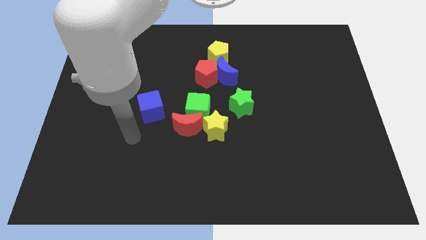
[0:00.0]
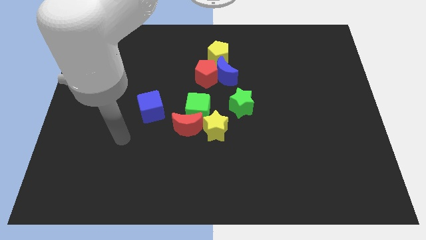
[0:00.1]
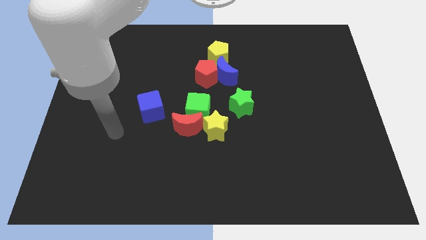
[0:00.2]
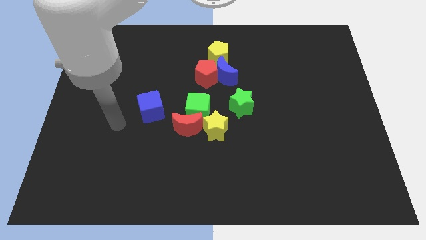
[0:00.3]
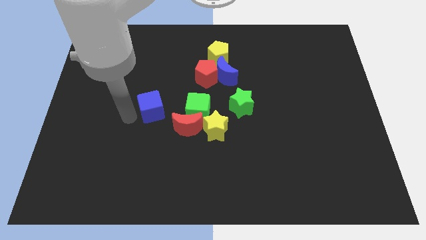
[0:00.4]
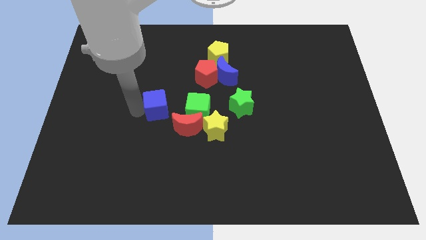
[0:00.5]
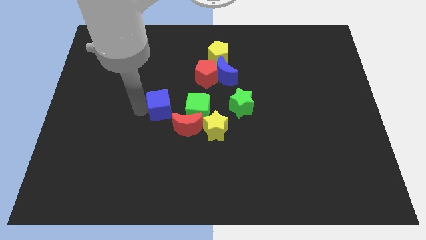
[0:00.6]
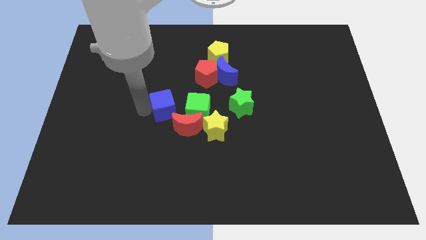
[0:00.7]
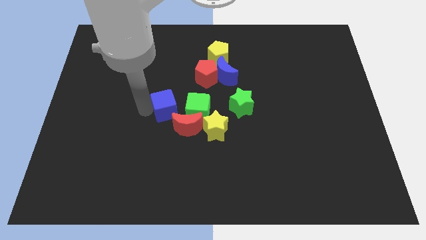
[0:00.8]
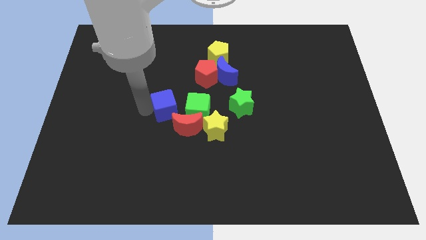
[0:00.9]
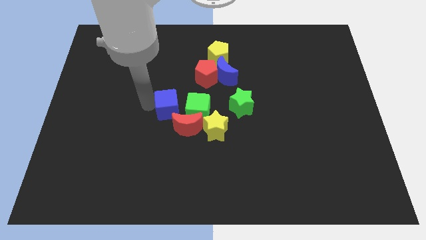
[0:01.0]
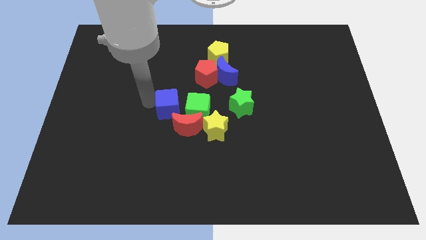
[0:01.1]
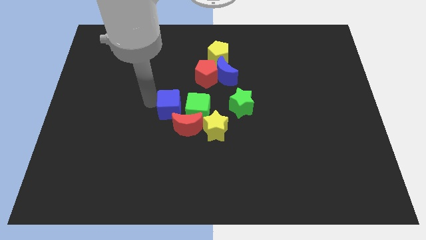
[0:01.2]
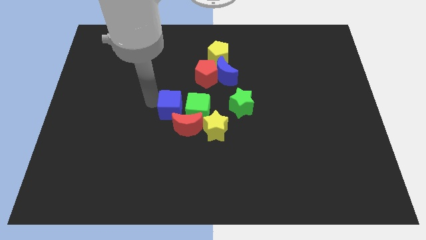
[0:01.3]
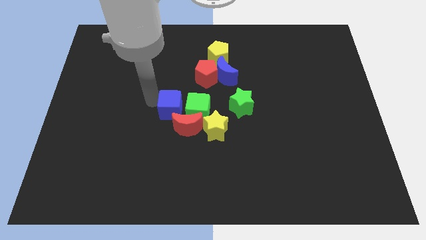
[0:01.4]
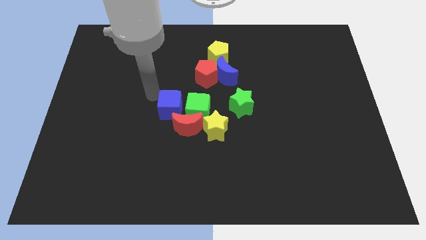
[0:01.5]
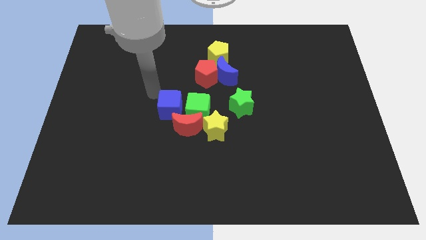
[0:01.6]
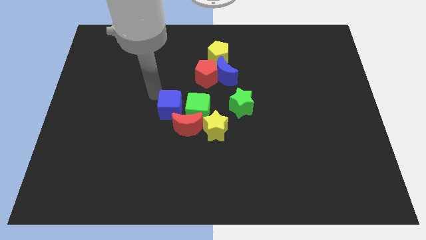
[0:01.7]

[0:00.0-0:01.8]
move blue cube to the left of green cube

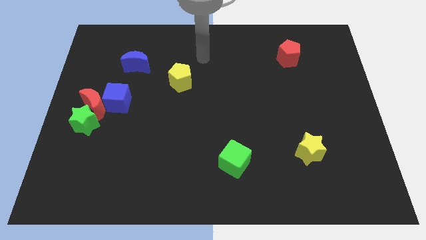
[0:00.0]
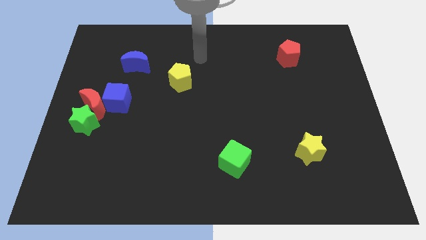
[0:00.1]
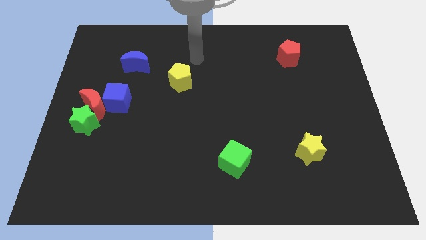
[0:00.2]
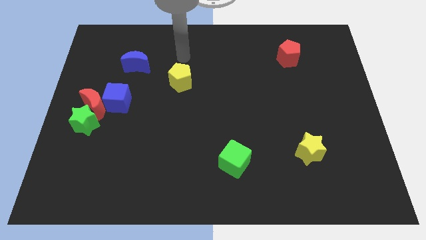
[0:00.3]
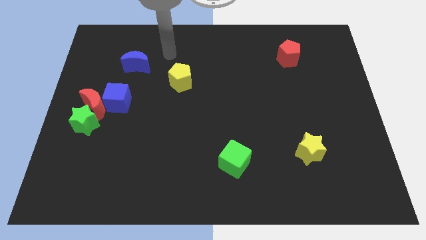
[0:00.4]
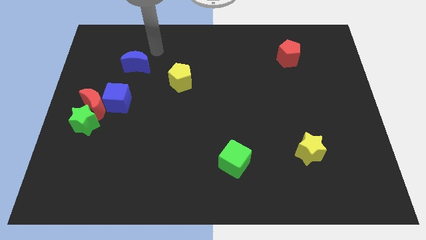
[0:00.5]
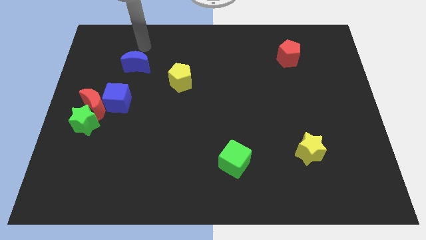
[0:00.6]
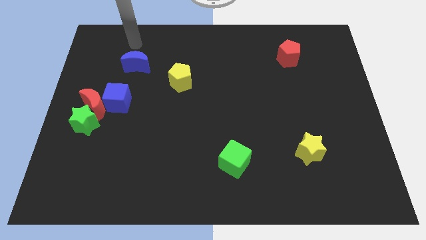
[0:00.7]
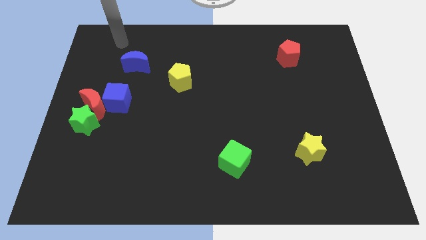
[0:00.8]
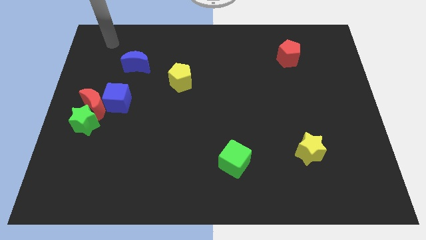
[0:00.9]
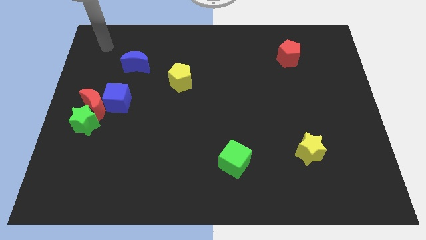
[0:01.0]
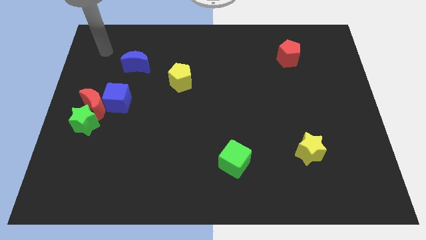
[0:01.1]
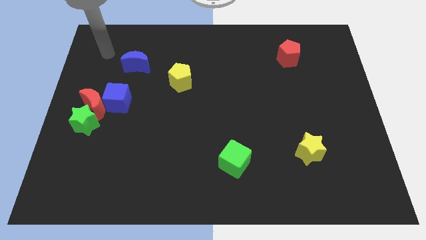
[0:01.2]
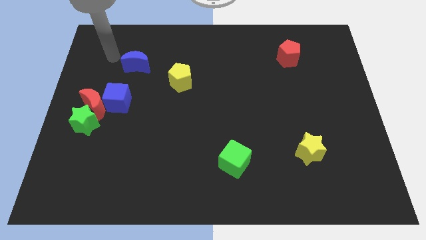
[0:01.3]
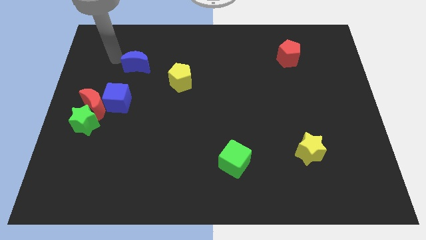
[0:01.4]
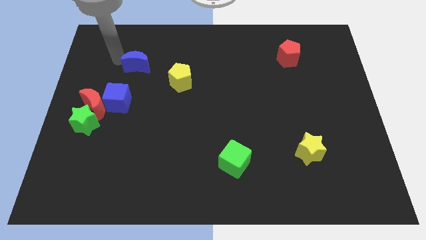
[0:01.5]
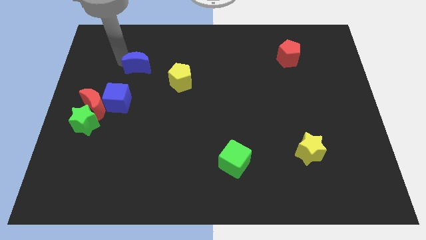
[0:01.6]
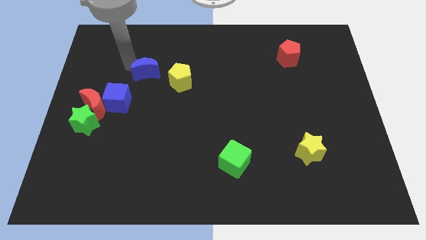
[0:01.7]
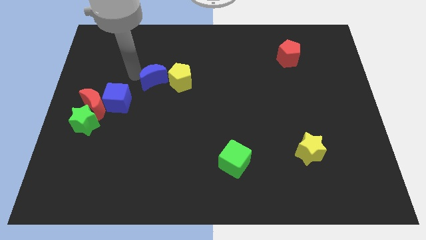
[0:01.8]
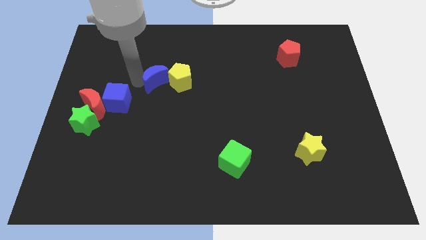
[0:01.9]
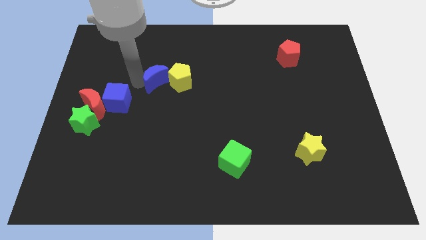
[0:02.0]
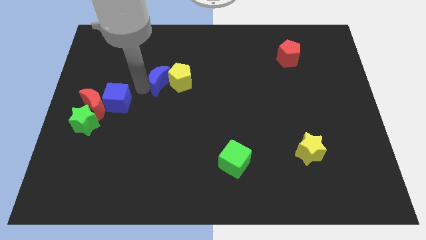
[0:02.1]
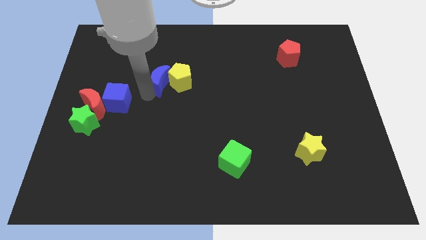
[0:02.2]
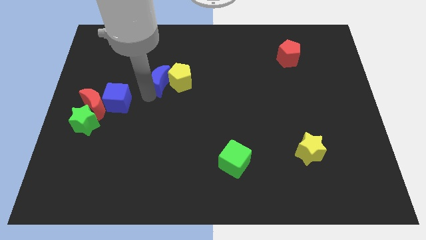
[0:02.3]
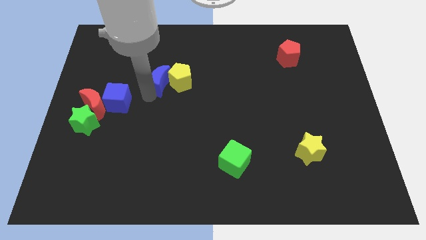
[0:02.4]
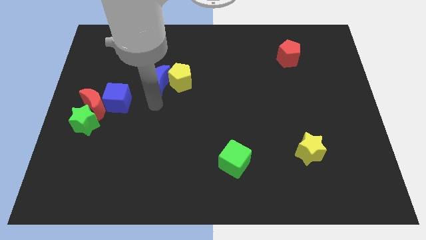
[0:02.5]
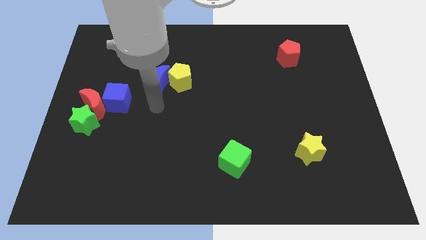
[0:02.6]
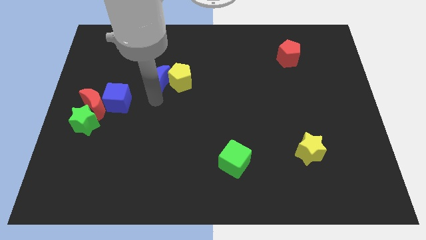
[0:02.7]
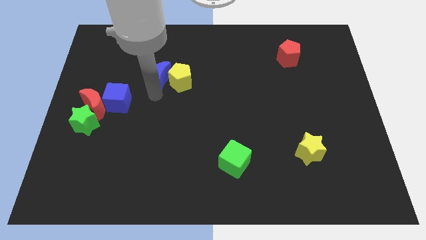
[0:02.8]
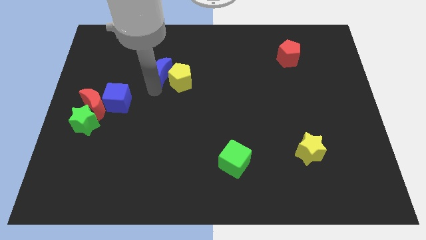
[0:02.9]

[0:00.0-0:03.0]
move the blue moon to the top left of yellow pentagon

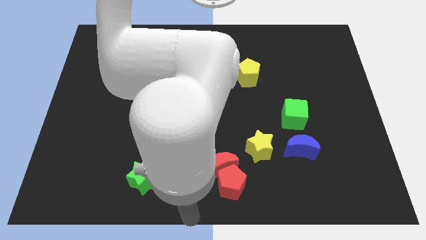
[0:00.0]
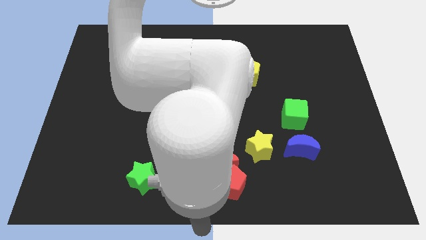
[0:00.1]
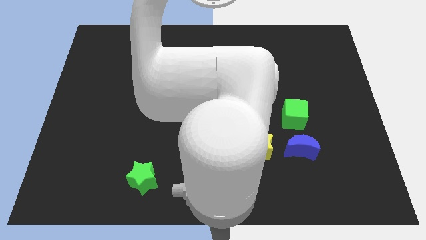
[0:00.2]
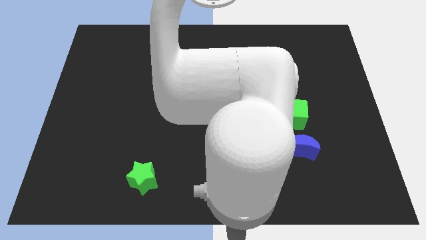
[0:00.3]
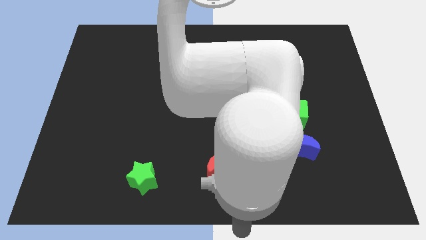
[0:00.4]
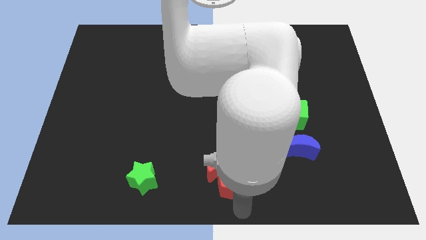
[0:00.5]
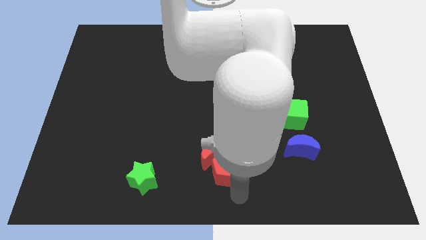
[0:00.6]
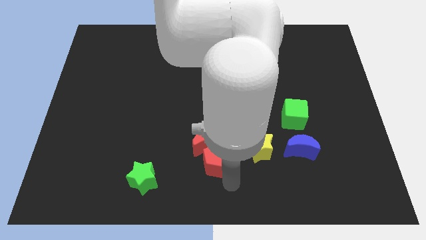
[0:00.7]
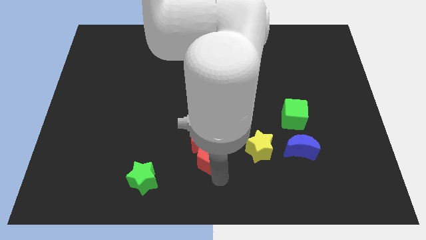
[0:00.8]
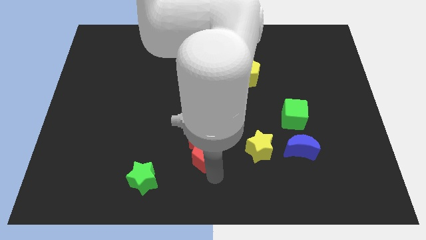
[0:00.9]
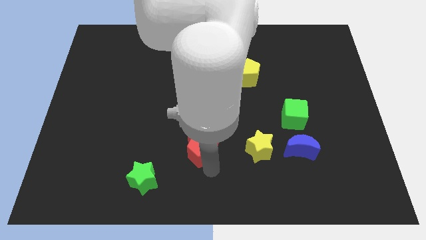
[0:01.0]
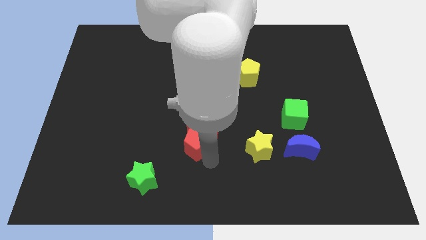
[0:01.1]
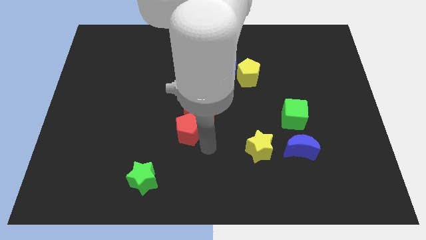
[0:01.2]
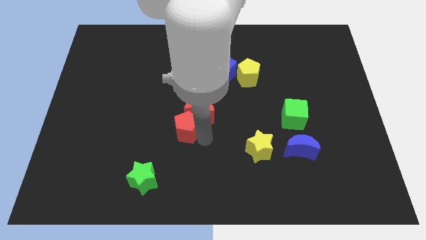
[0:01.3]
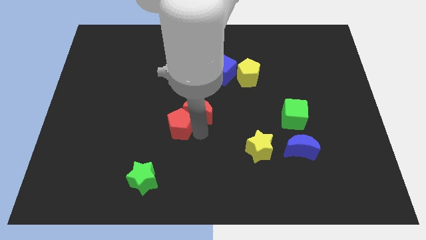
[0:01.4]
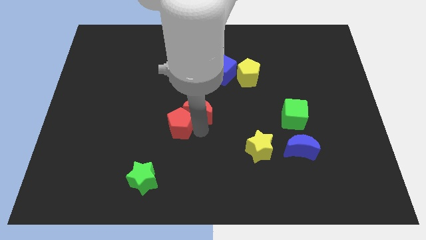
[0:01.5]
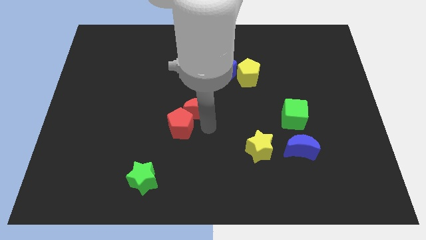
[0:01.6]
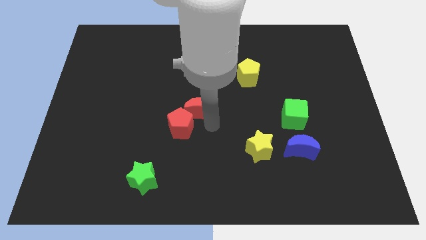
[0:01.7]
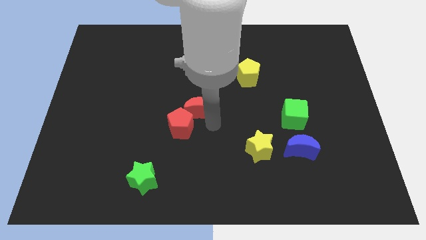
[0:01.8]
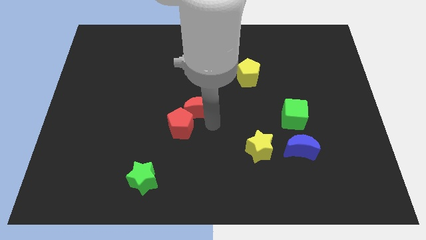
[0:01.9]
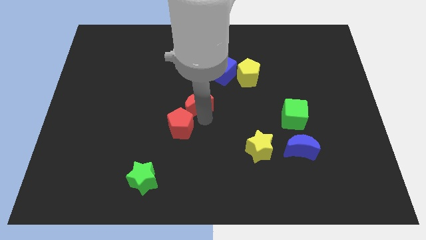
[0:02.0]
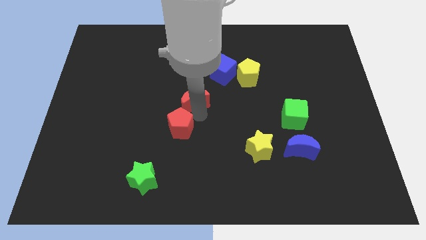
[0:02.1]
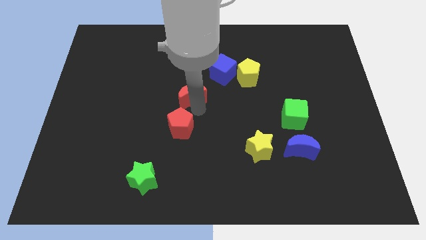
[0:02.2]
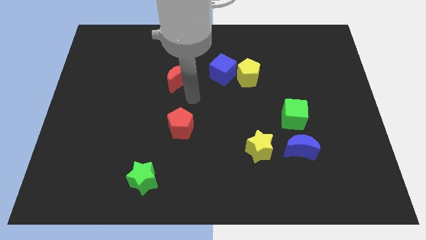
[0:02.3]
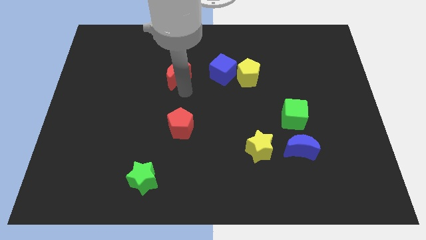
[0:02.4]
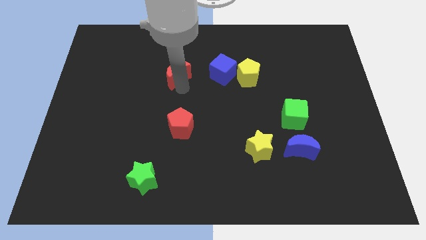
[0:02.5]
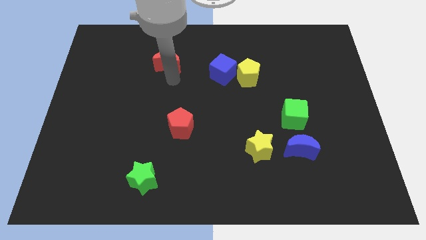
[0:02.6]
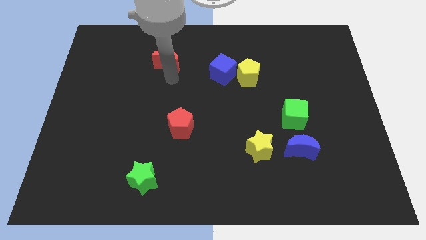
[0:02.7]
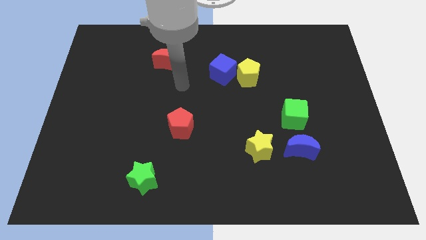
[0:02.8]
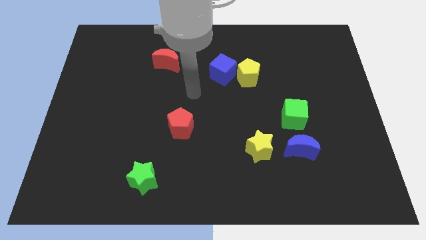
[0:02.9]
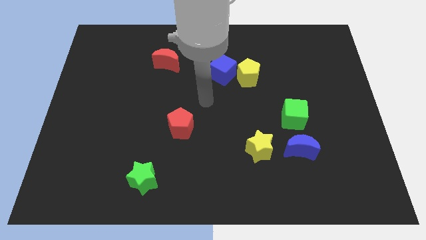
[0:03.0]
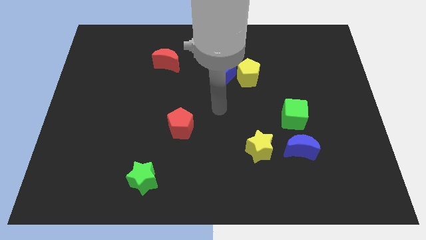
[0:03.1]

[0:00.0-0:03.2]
place the red moon towards the top side of the board

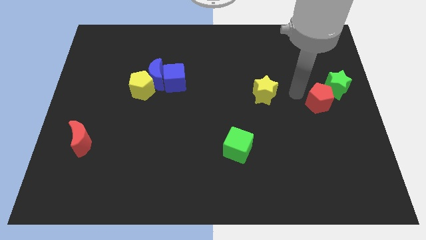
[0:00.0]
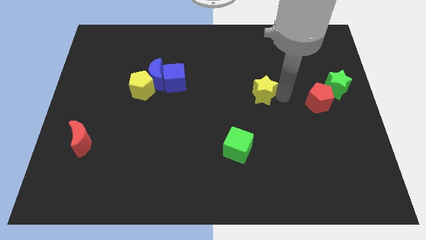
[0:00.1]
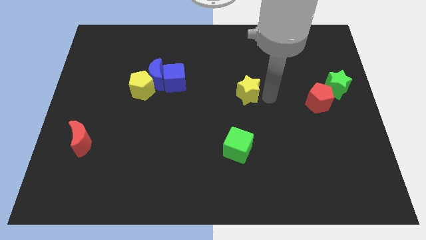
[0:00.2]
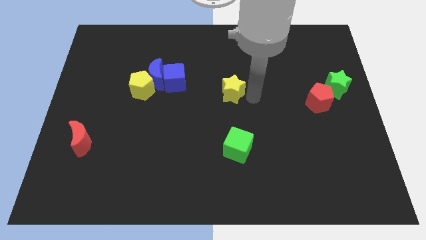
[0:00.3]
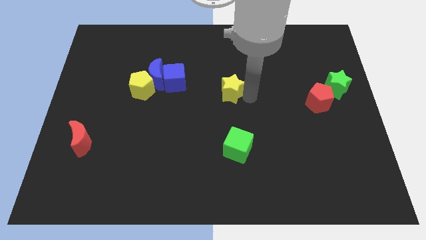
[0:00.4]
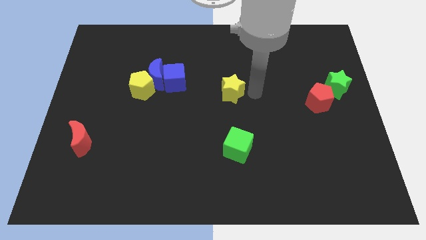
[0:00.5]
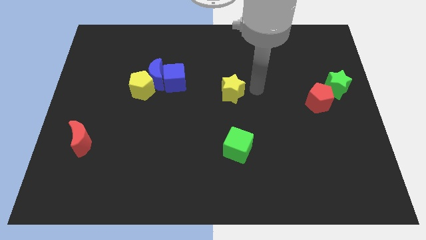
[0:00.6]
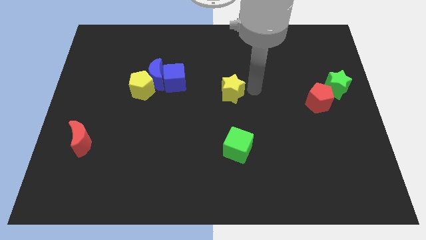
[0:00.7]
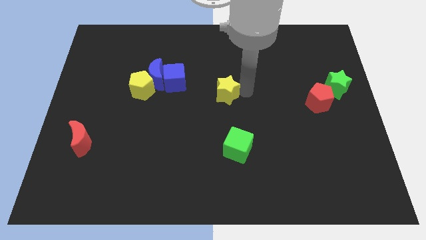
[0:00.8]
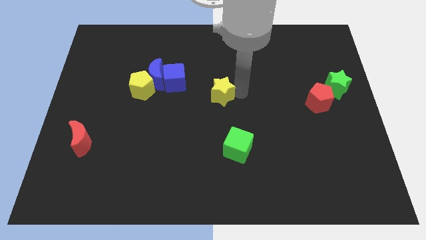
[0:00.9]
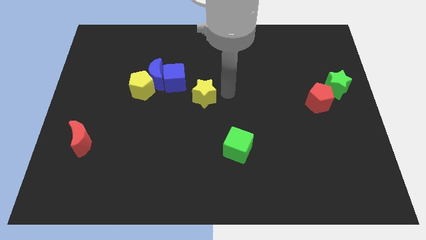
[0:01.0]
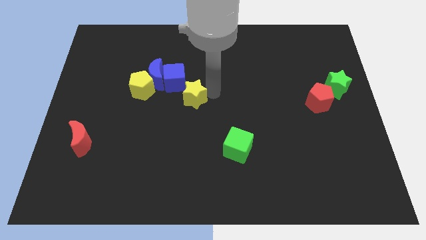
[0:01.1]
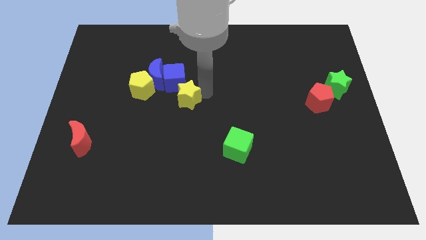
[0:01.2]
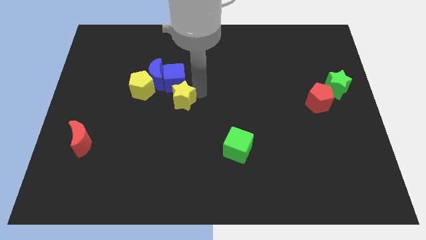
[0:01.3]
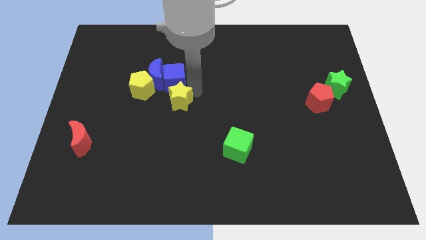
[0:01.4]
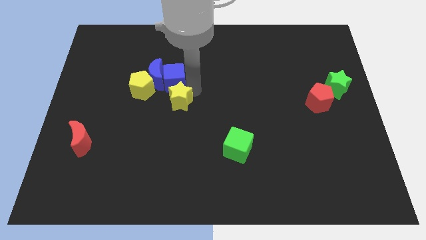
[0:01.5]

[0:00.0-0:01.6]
place the yellow star down to the blue cube
